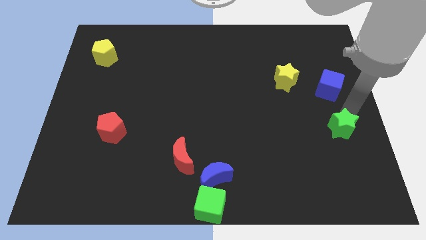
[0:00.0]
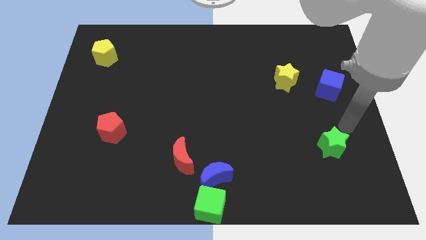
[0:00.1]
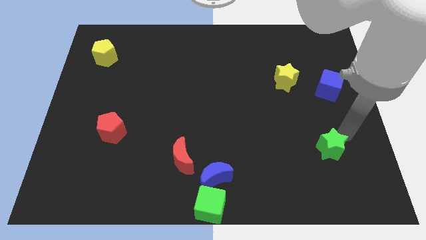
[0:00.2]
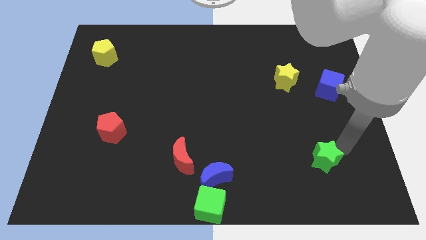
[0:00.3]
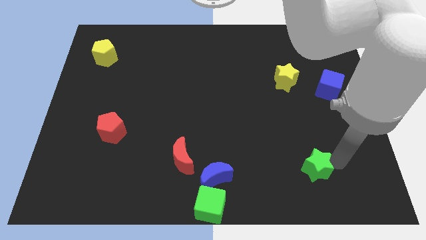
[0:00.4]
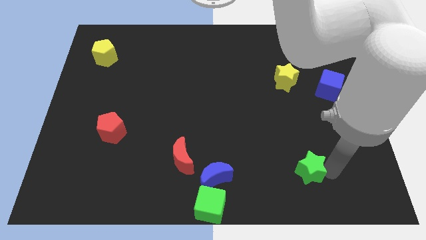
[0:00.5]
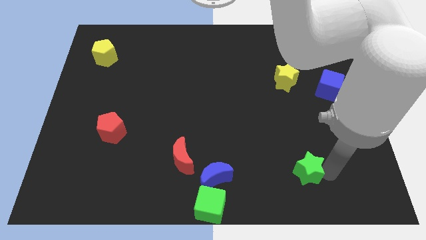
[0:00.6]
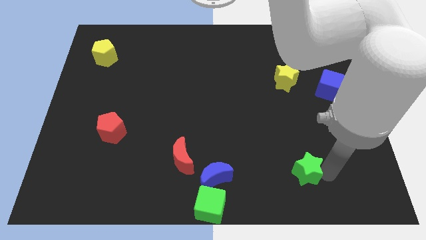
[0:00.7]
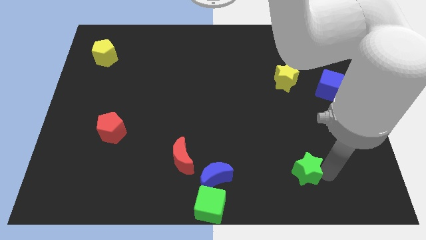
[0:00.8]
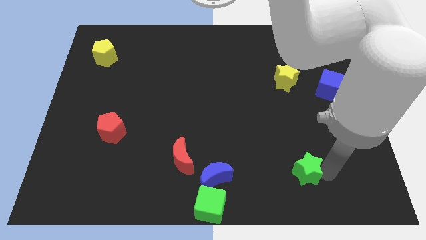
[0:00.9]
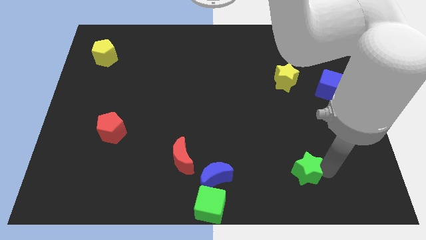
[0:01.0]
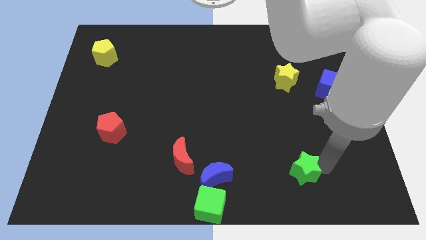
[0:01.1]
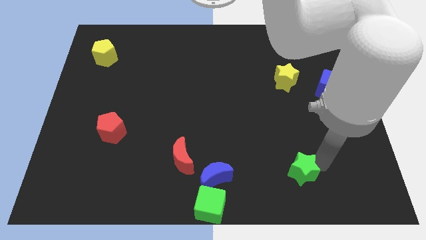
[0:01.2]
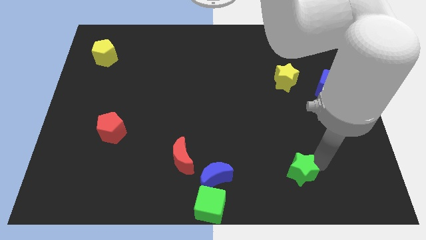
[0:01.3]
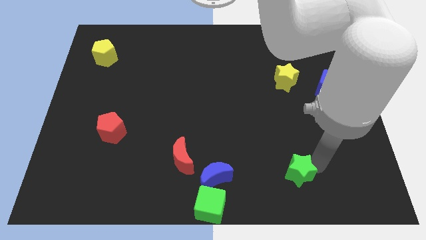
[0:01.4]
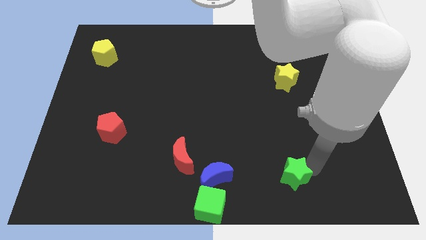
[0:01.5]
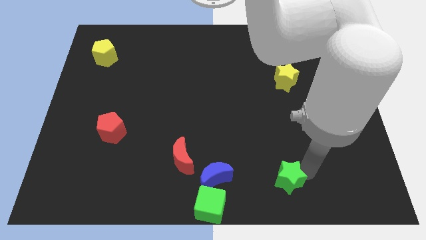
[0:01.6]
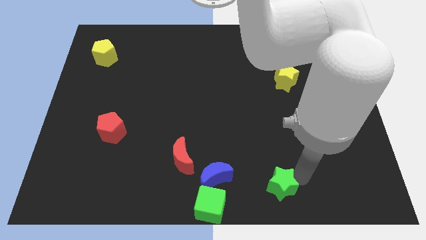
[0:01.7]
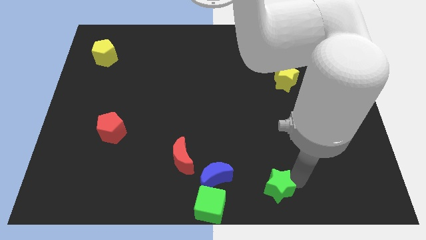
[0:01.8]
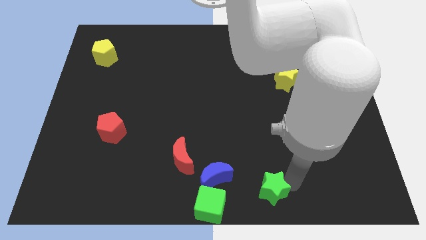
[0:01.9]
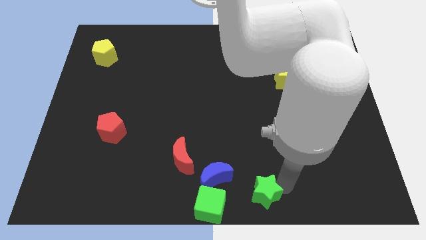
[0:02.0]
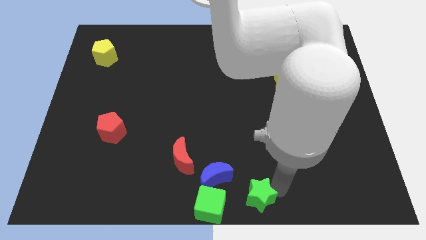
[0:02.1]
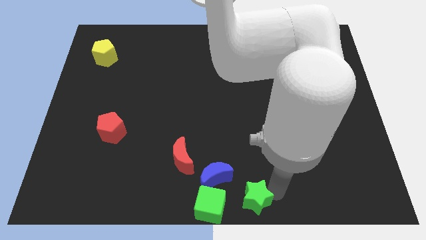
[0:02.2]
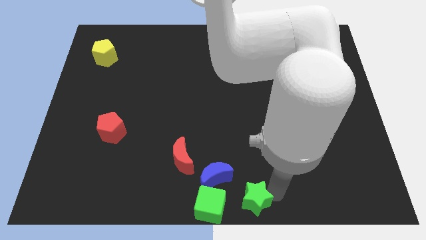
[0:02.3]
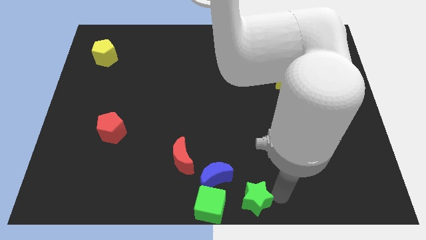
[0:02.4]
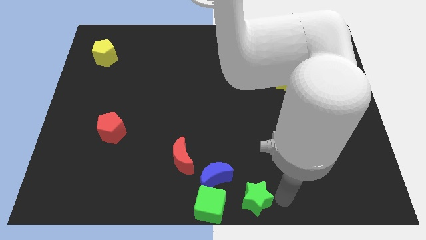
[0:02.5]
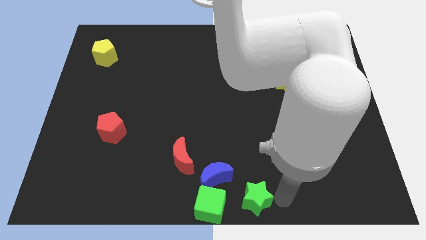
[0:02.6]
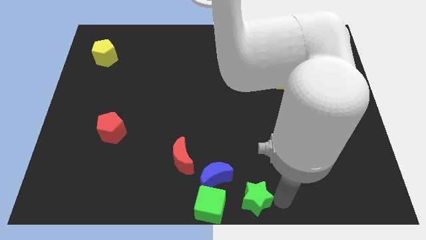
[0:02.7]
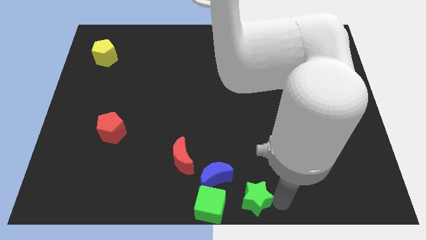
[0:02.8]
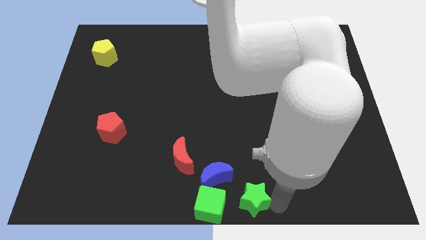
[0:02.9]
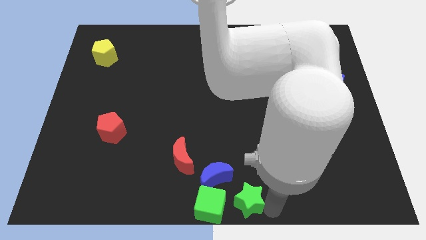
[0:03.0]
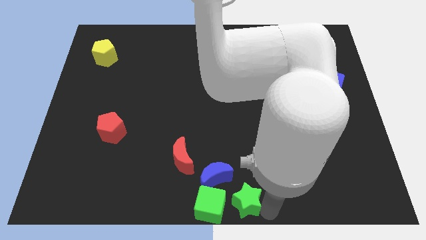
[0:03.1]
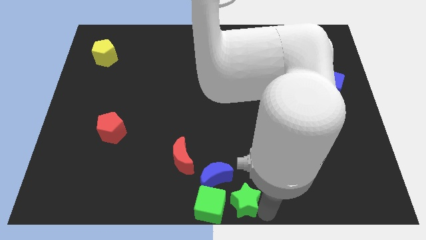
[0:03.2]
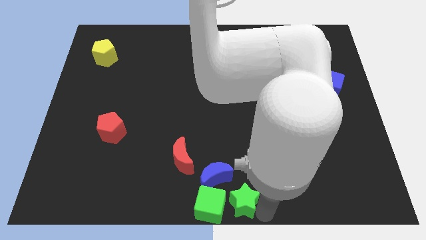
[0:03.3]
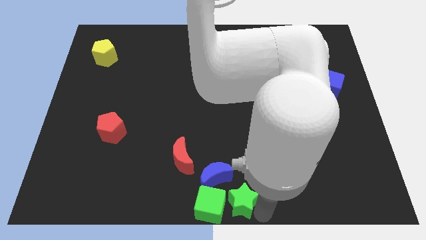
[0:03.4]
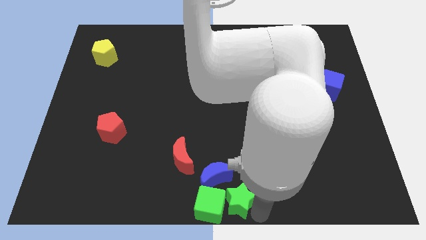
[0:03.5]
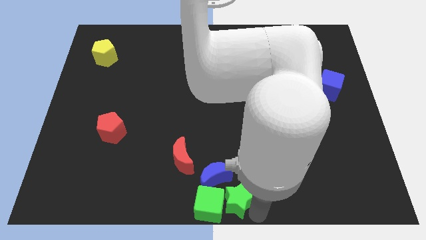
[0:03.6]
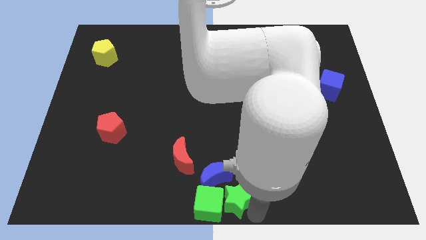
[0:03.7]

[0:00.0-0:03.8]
place the green star below the blue moon

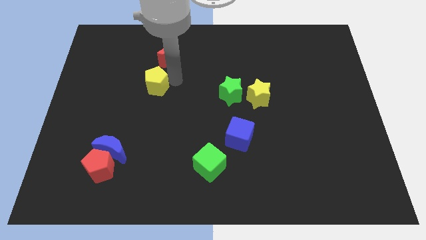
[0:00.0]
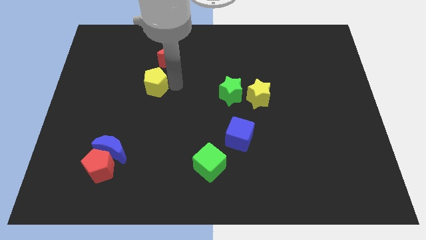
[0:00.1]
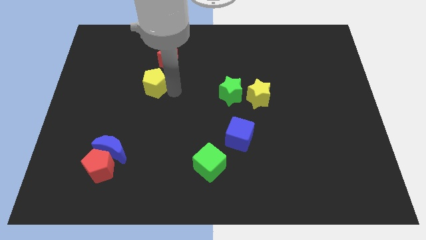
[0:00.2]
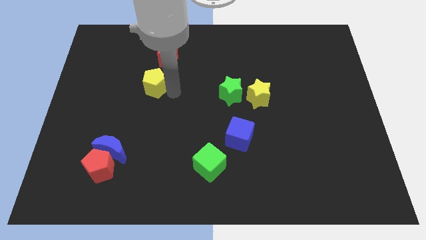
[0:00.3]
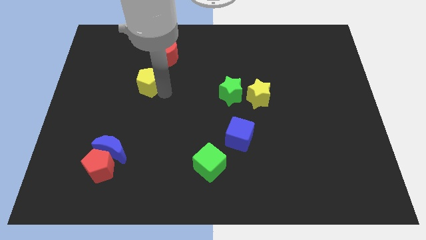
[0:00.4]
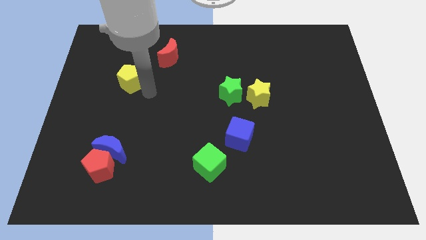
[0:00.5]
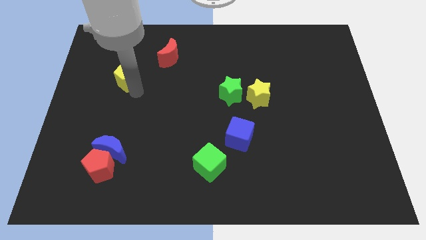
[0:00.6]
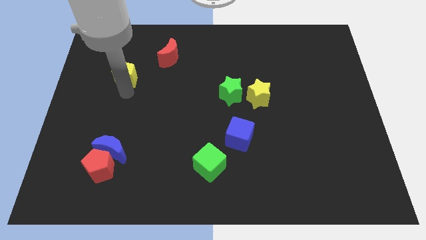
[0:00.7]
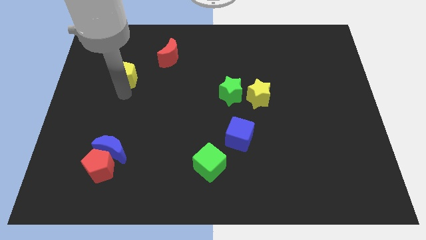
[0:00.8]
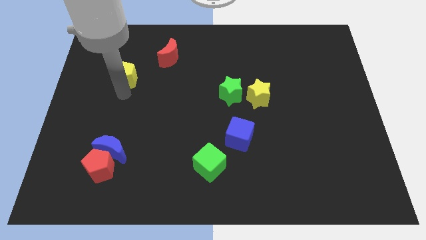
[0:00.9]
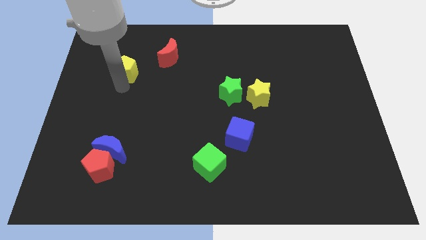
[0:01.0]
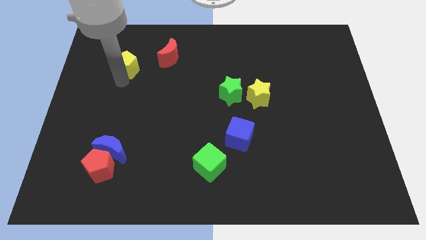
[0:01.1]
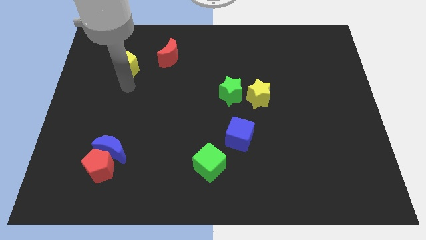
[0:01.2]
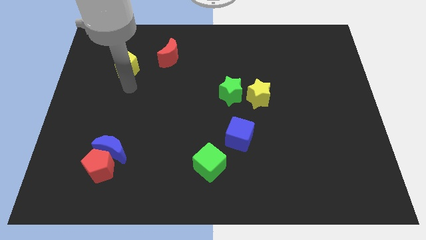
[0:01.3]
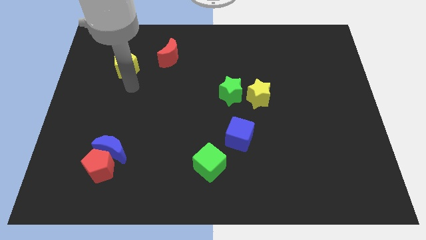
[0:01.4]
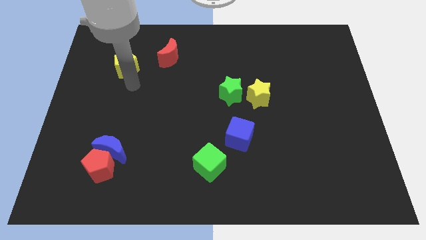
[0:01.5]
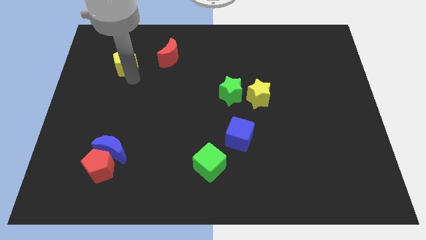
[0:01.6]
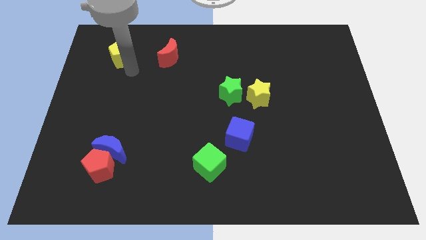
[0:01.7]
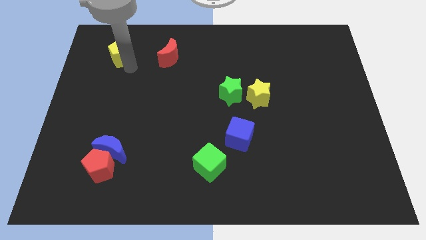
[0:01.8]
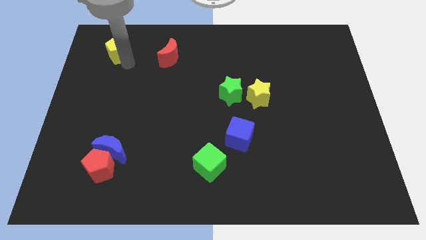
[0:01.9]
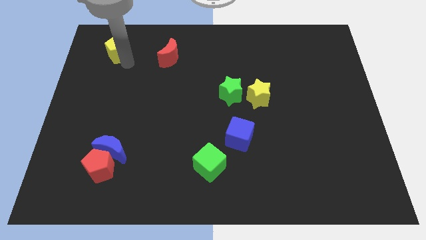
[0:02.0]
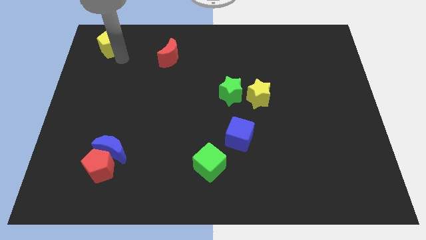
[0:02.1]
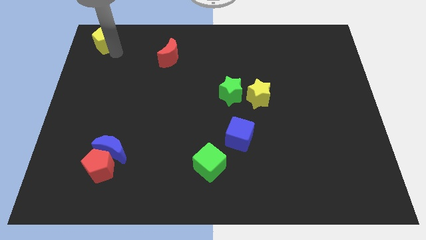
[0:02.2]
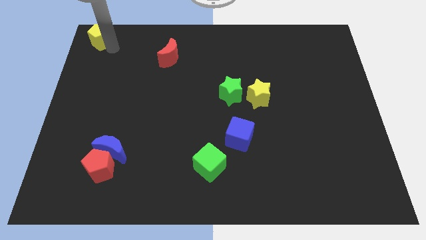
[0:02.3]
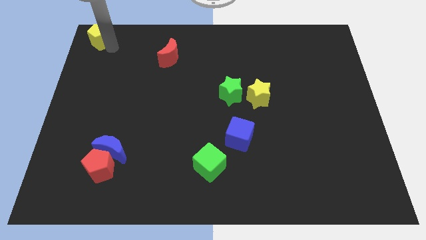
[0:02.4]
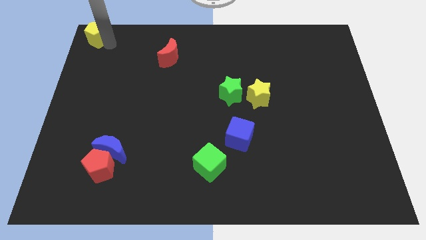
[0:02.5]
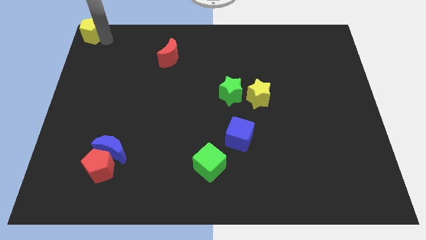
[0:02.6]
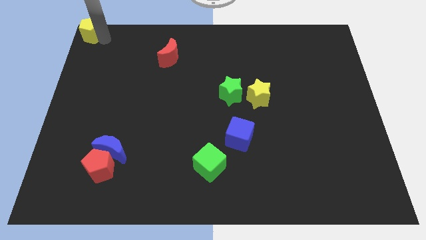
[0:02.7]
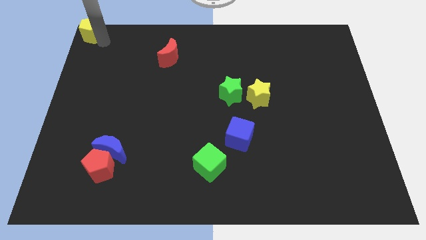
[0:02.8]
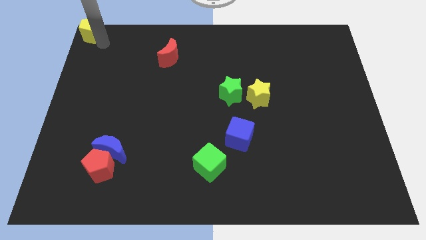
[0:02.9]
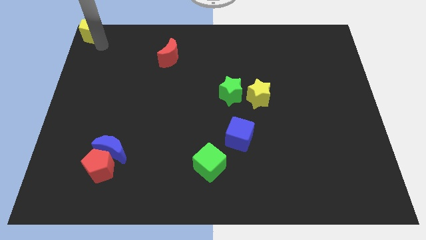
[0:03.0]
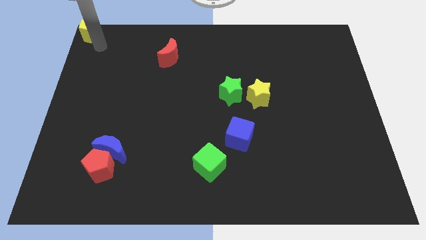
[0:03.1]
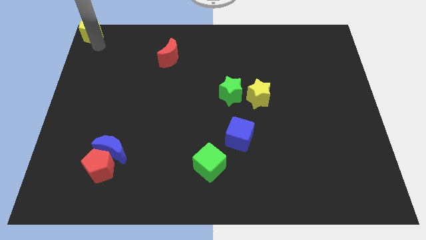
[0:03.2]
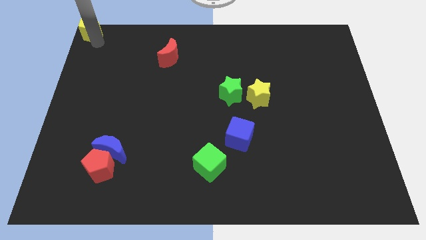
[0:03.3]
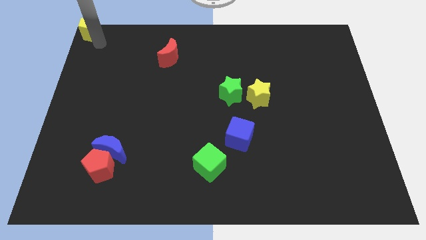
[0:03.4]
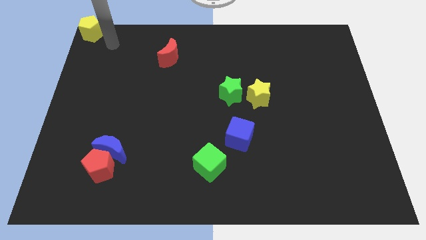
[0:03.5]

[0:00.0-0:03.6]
place yellow pentagon to the top left corner of the board

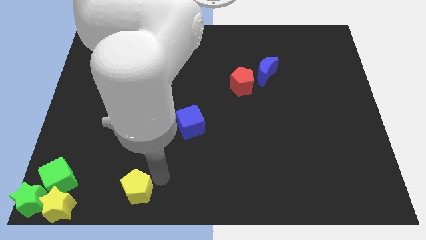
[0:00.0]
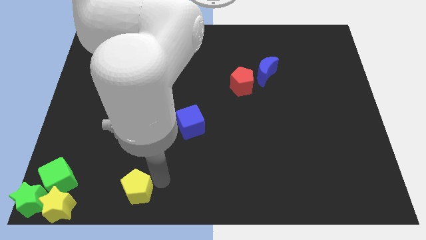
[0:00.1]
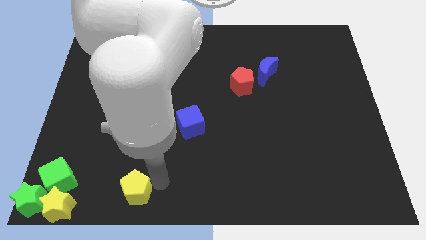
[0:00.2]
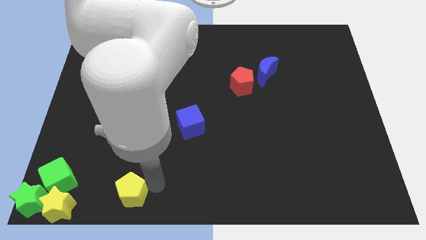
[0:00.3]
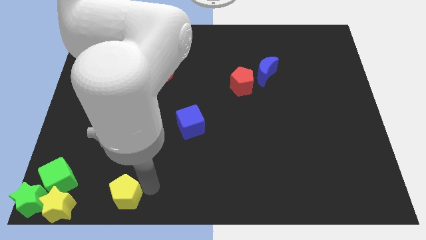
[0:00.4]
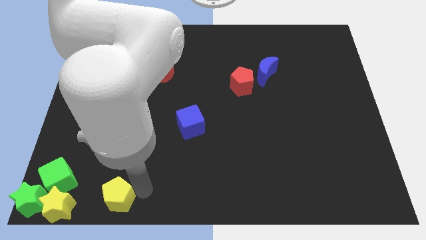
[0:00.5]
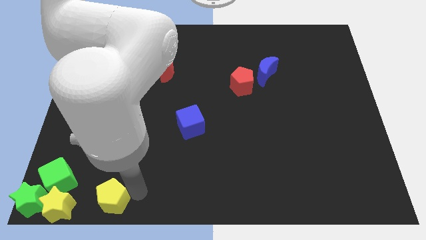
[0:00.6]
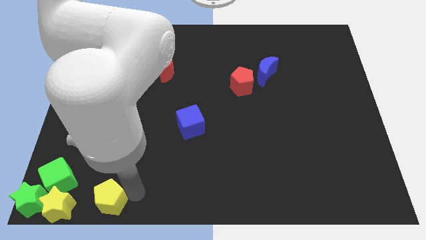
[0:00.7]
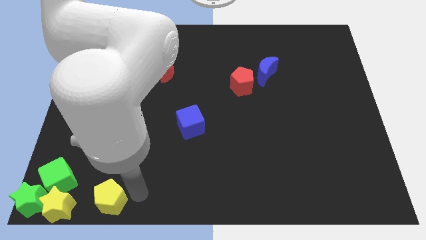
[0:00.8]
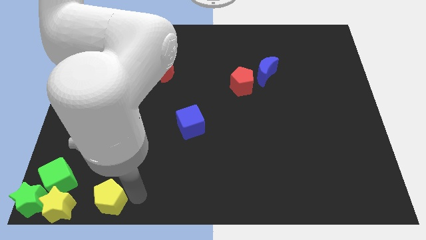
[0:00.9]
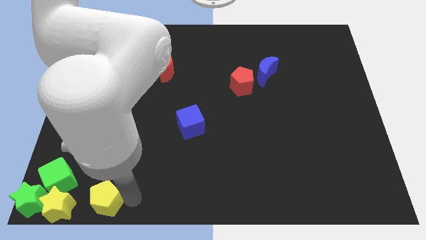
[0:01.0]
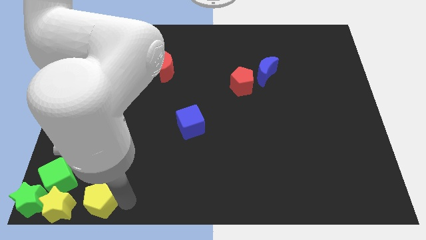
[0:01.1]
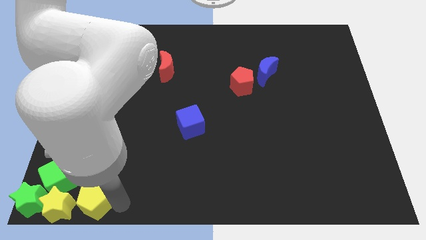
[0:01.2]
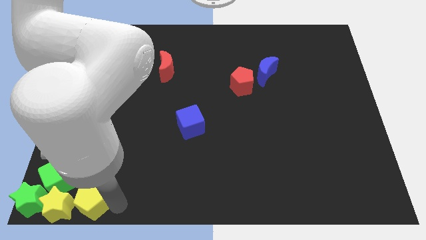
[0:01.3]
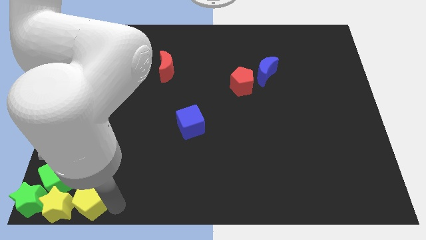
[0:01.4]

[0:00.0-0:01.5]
place yellow pentagon to the right of yellow star

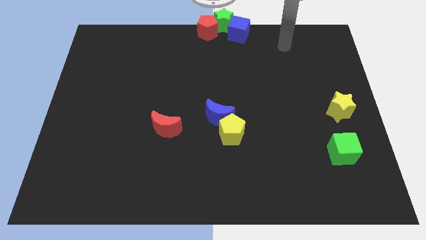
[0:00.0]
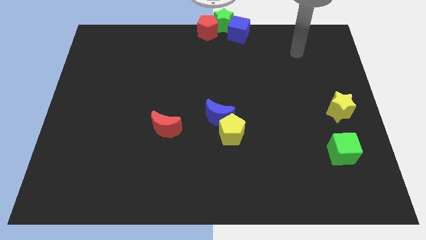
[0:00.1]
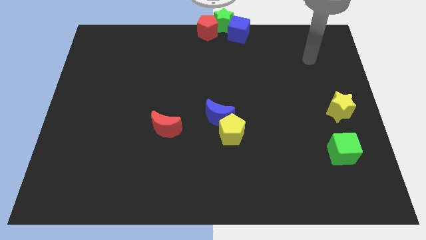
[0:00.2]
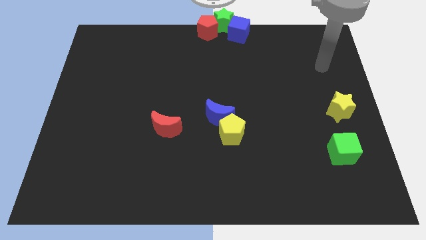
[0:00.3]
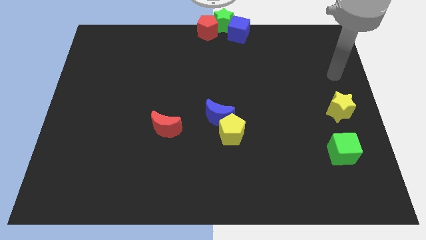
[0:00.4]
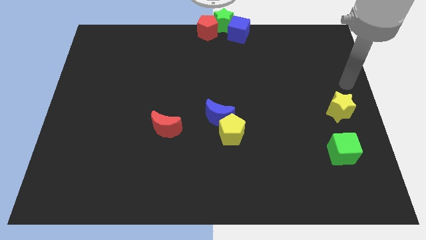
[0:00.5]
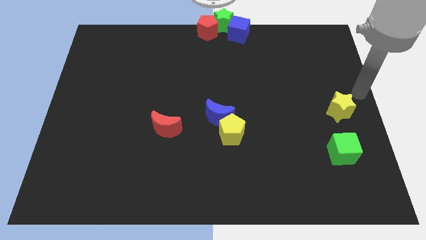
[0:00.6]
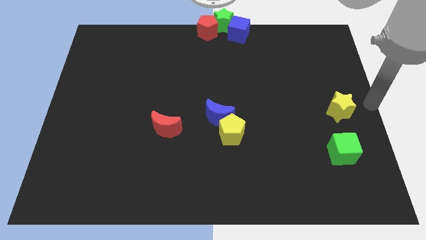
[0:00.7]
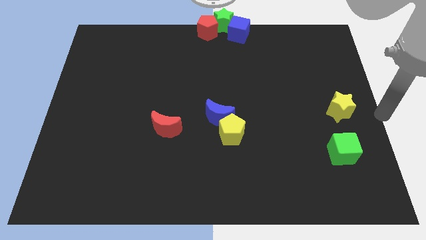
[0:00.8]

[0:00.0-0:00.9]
point your arm at the center right of the board
